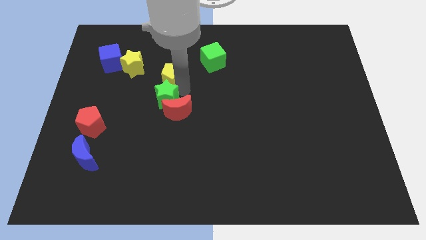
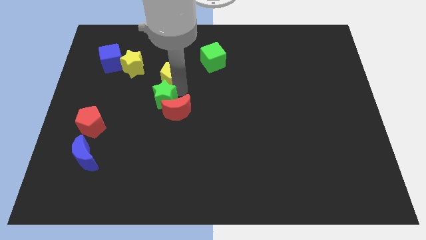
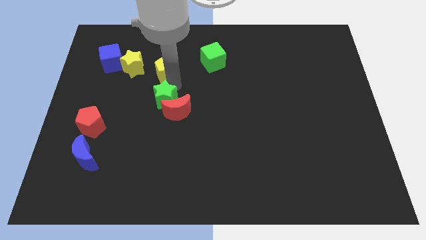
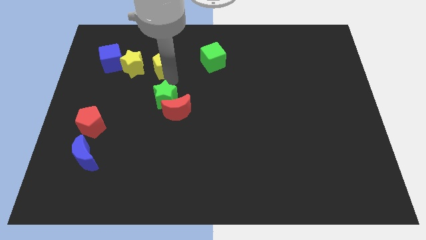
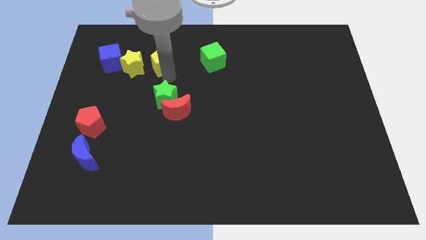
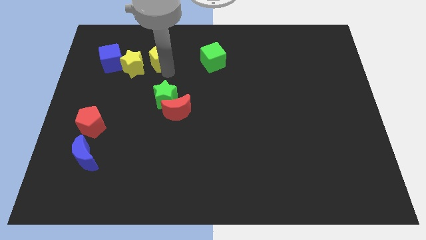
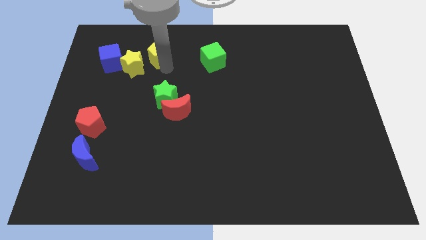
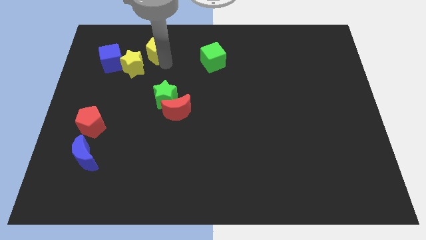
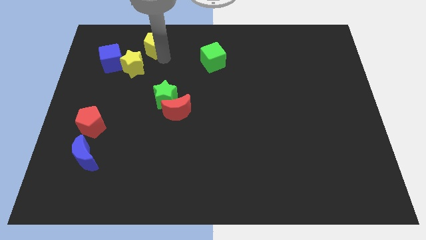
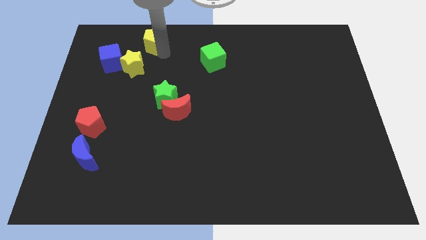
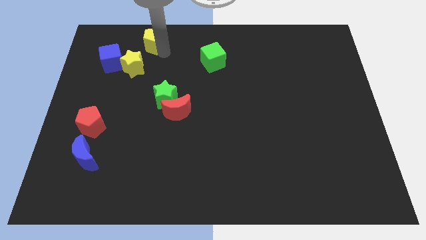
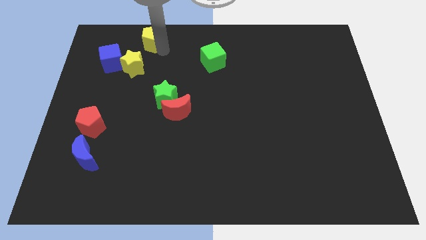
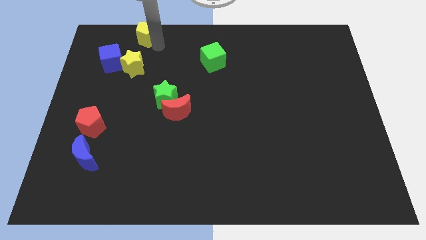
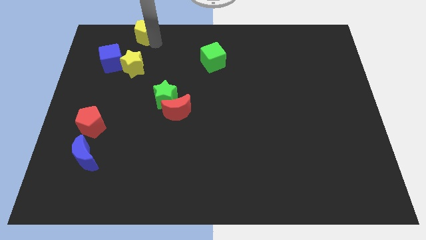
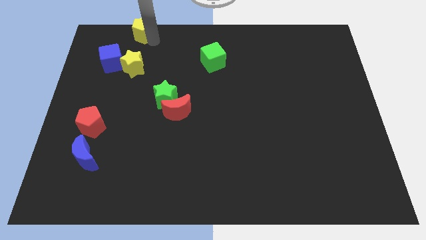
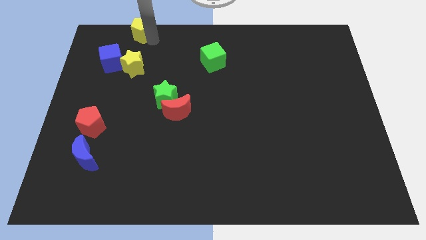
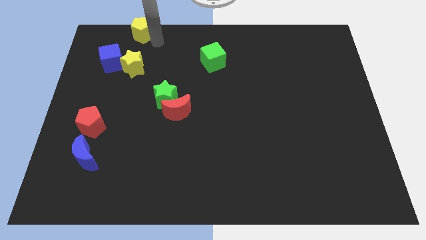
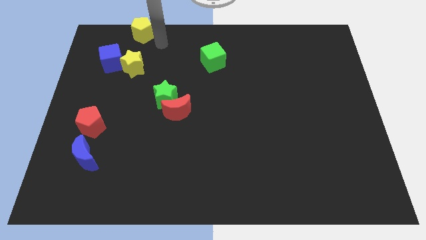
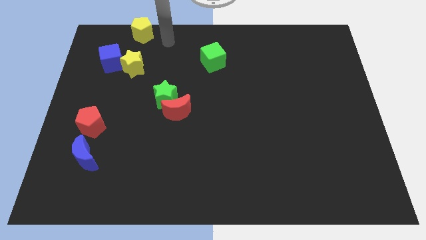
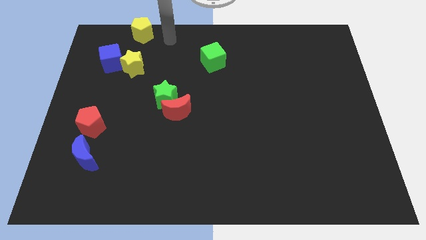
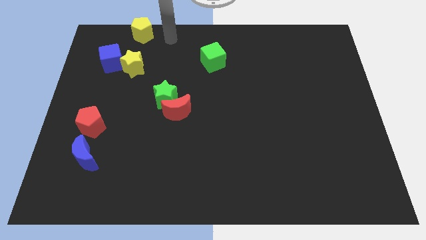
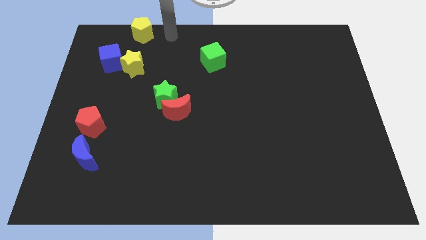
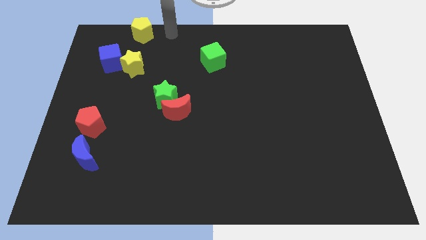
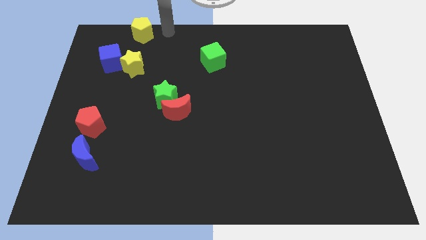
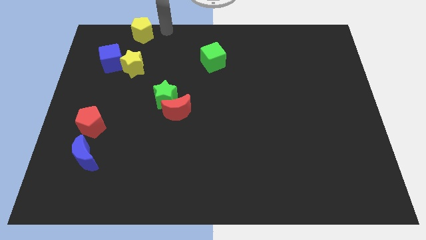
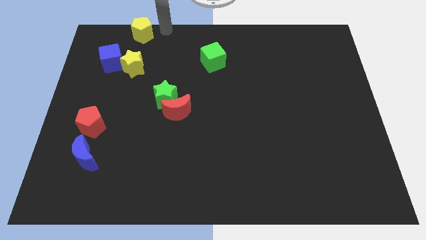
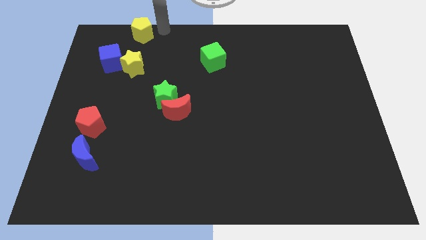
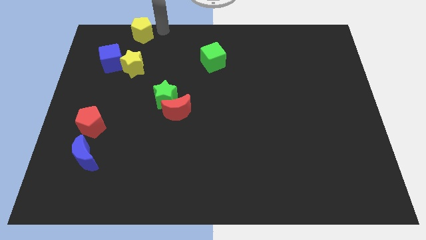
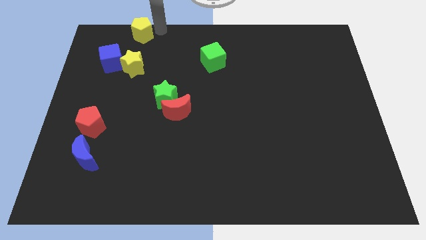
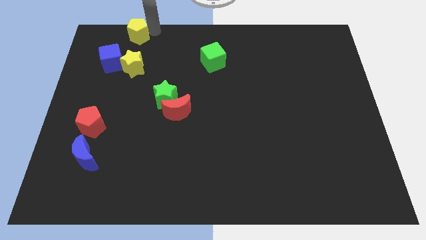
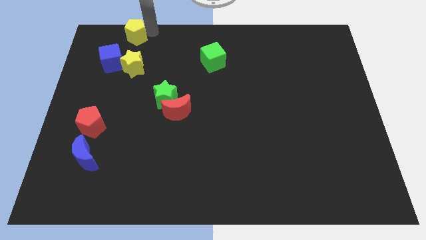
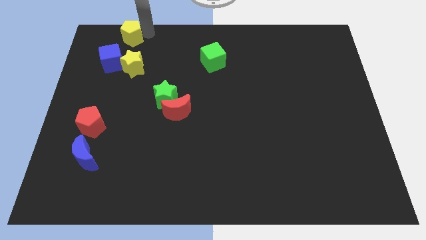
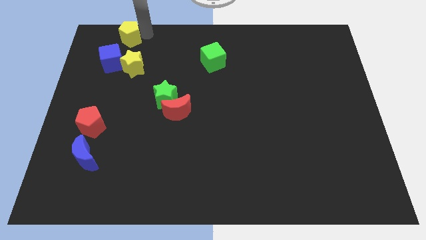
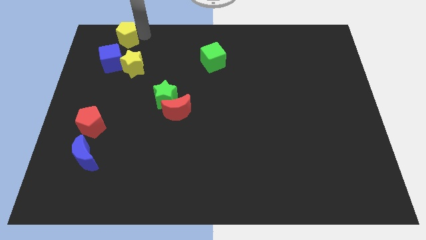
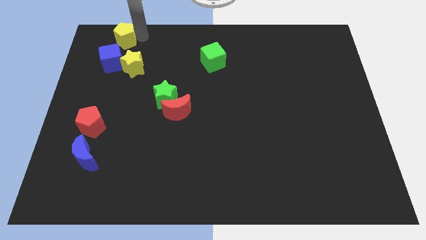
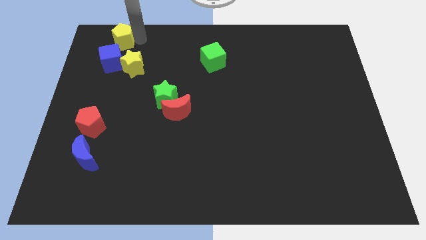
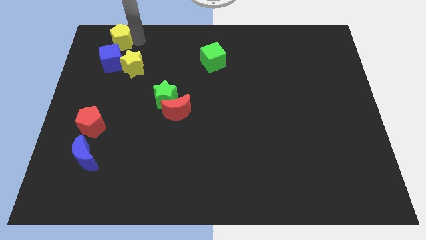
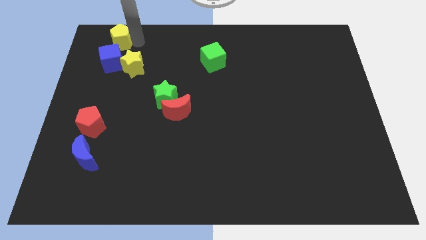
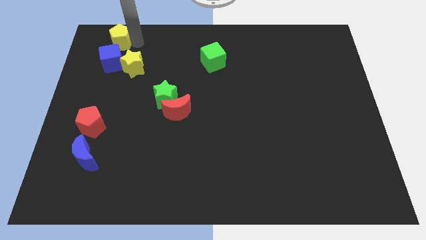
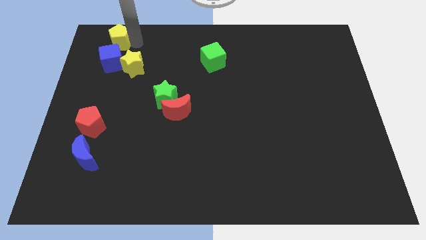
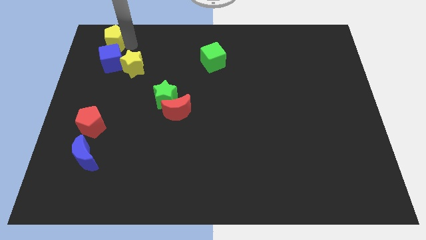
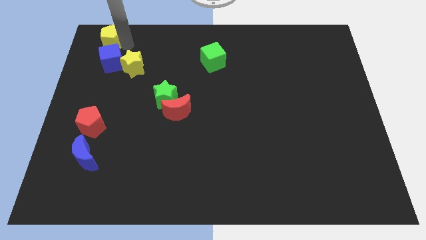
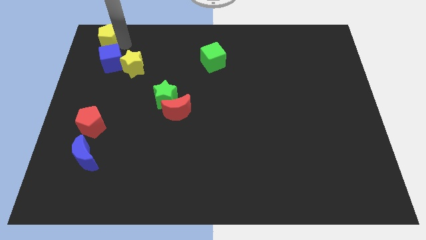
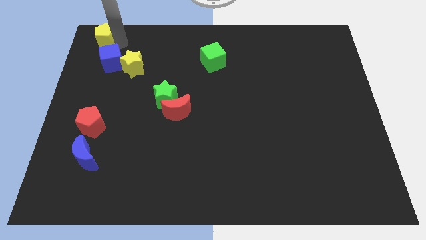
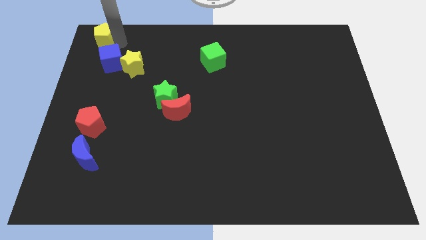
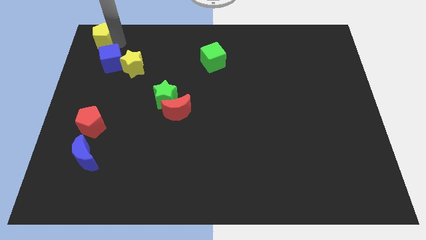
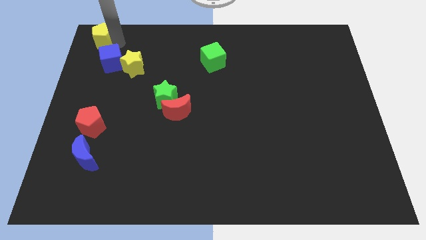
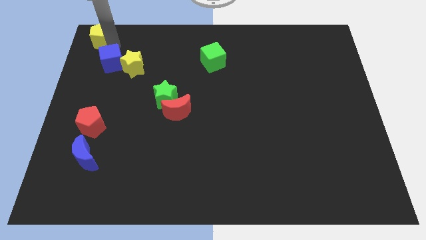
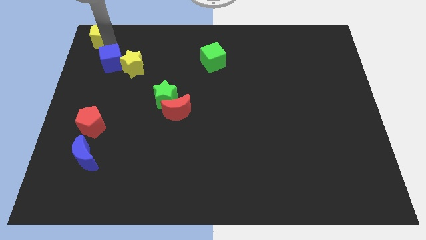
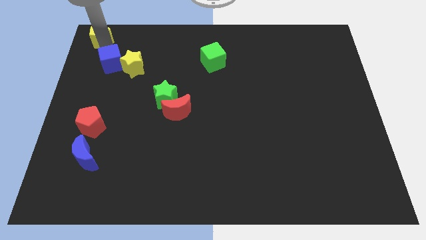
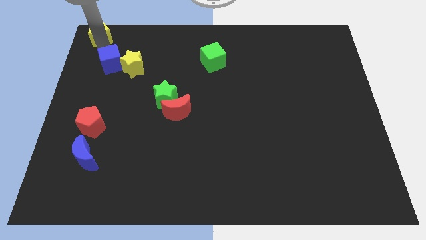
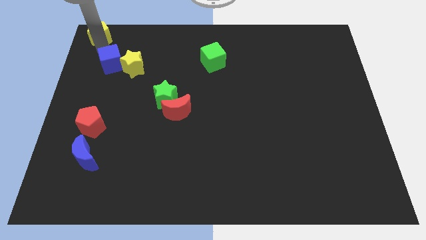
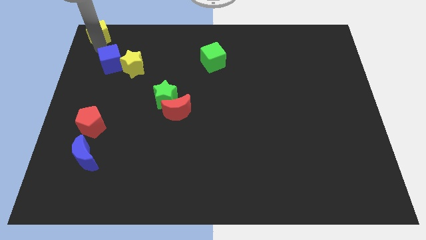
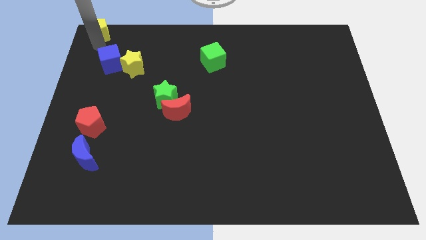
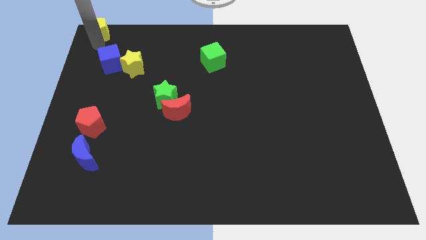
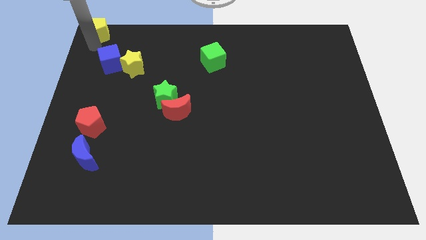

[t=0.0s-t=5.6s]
push the yellow pentagon to the top left

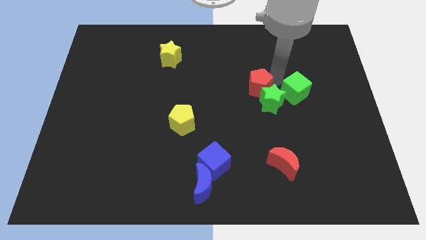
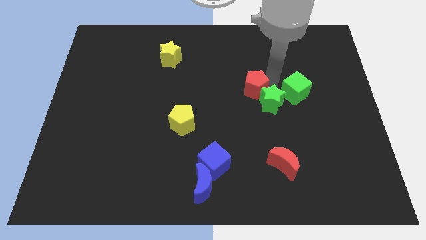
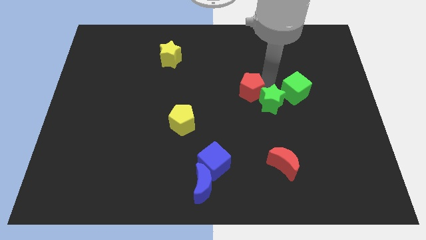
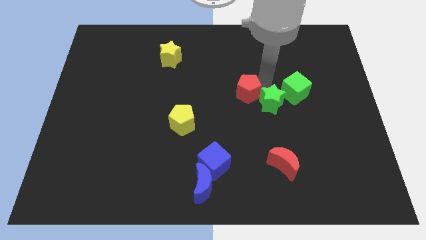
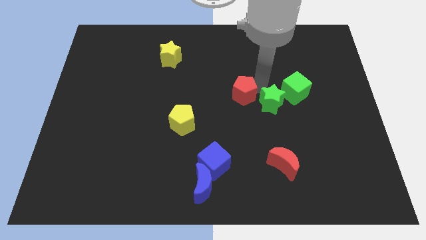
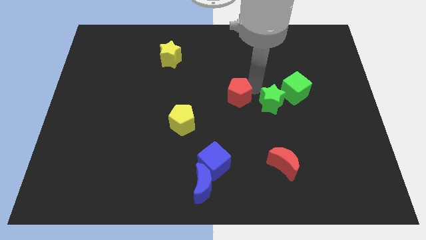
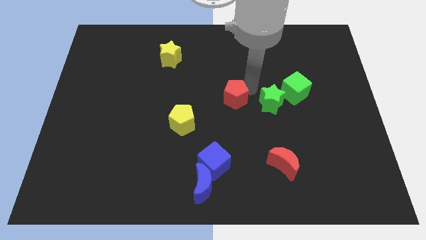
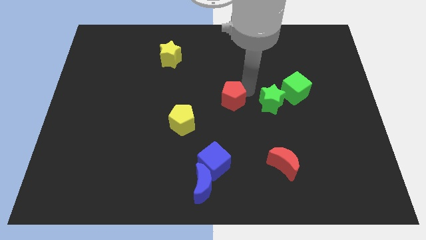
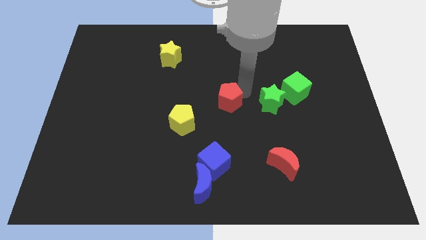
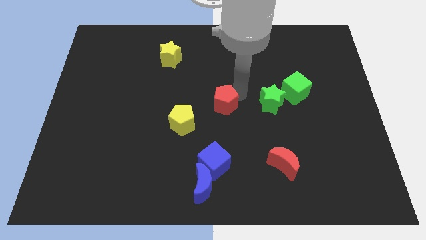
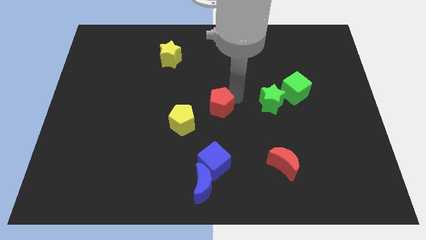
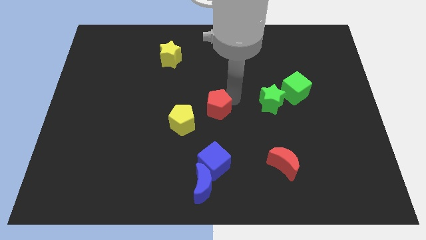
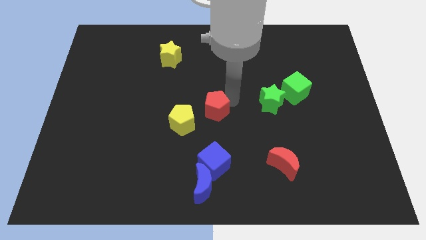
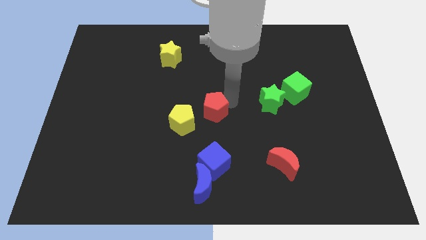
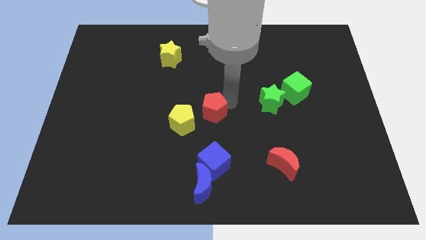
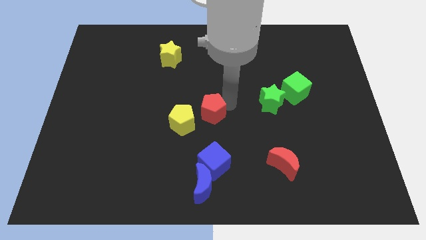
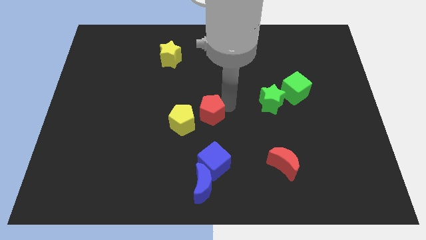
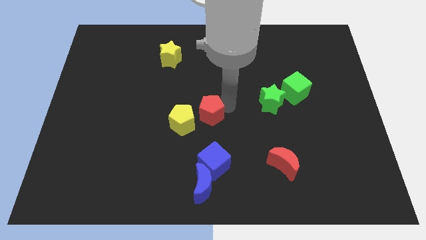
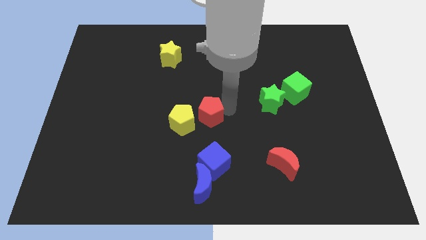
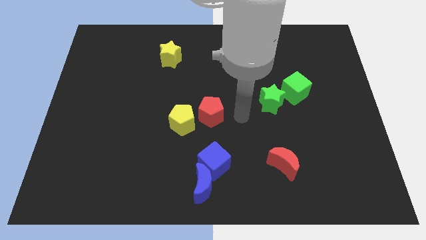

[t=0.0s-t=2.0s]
move the red pentagon diagonal to yellow pentagon

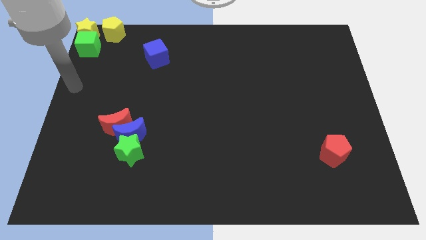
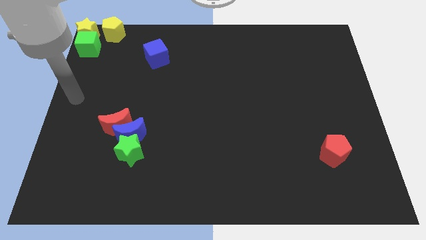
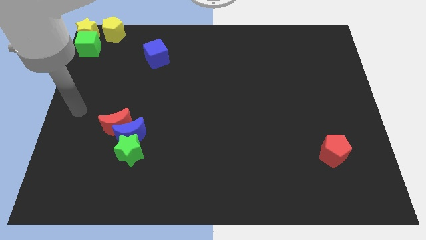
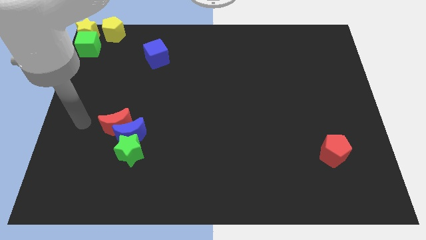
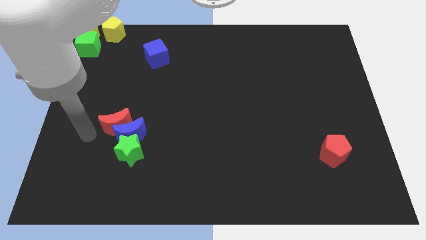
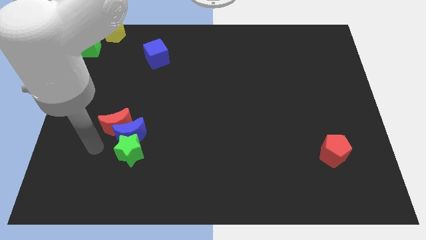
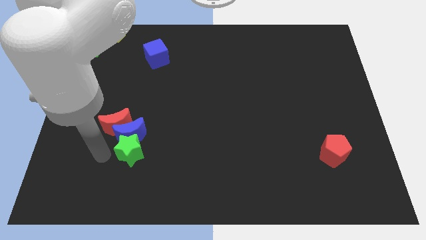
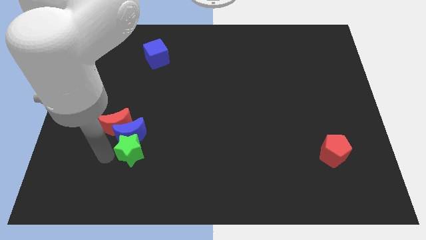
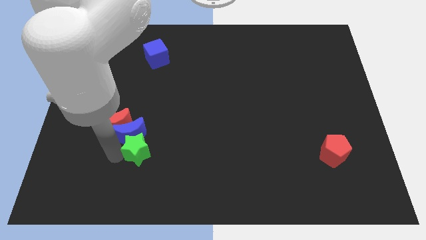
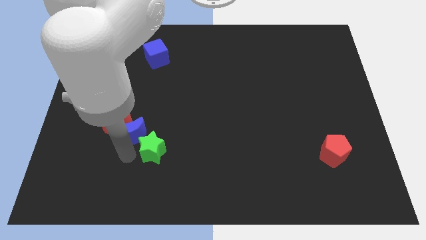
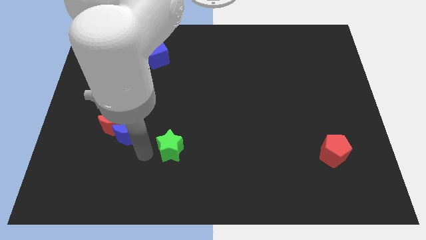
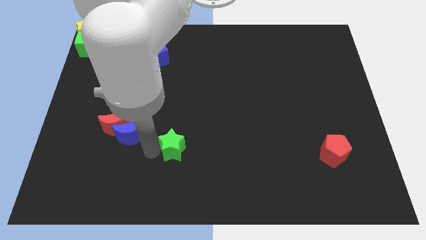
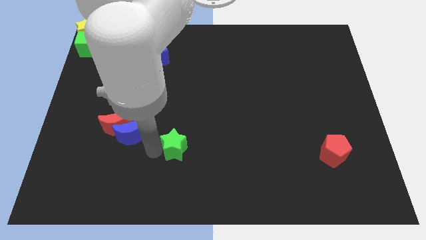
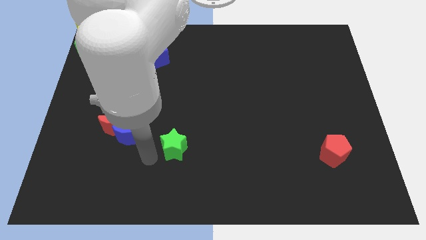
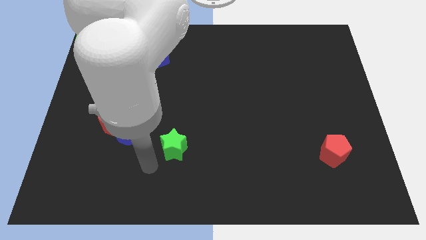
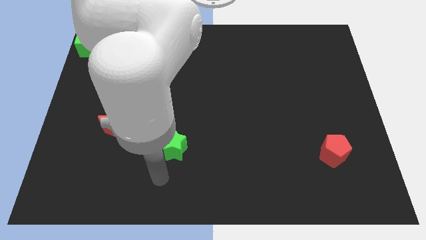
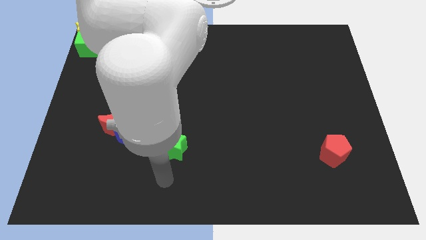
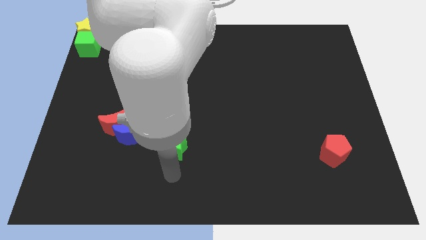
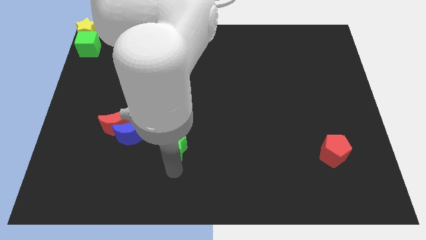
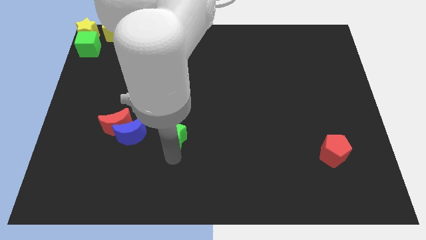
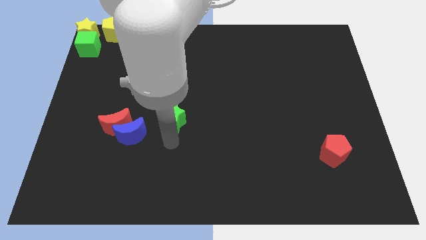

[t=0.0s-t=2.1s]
push the green star to the right side of the blue crescent
